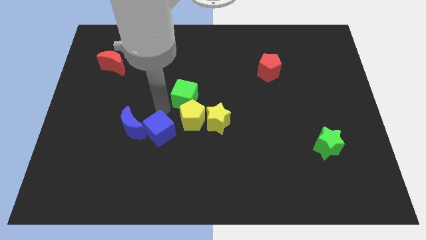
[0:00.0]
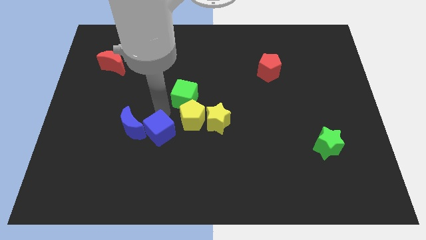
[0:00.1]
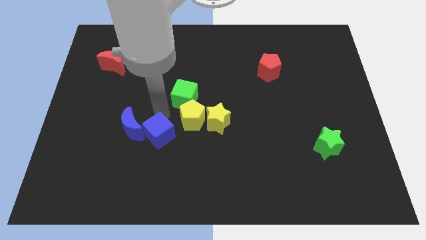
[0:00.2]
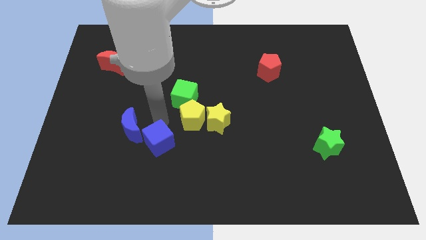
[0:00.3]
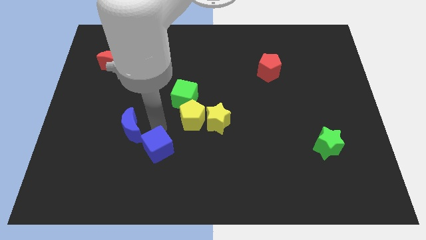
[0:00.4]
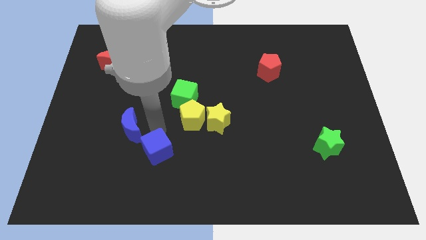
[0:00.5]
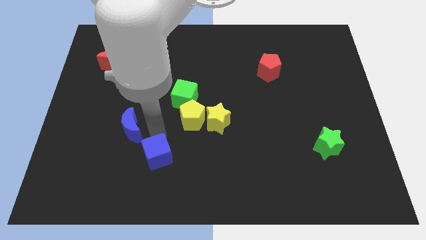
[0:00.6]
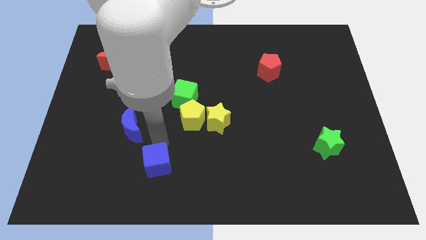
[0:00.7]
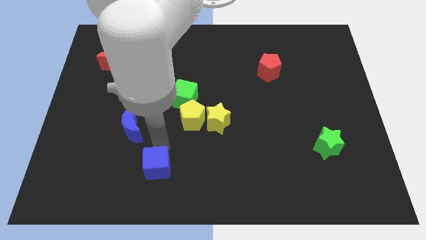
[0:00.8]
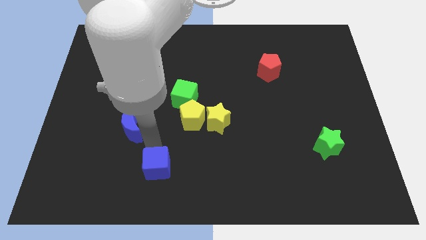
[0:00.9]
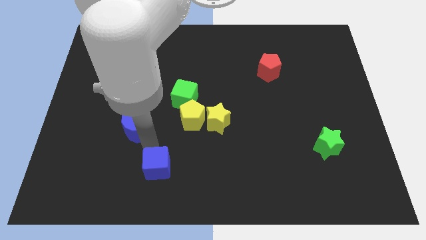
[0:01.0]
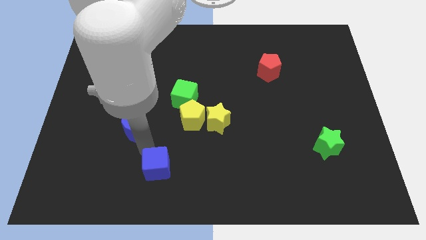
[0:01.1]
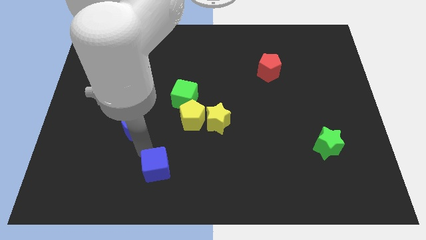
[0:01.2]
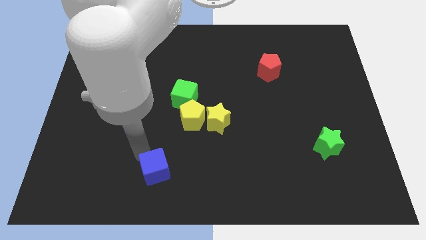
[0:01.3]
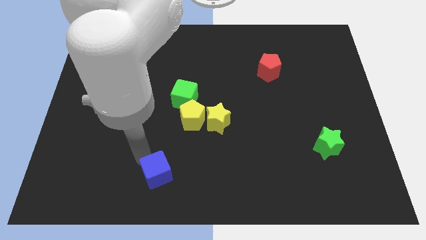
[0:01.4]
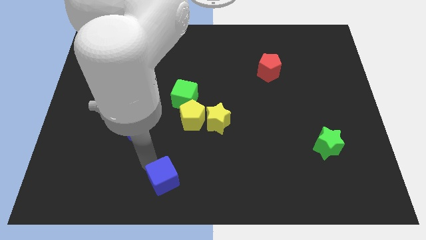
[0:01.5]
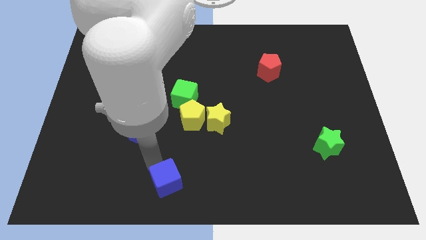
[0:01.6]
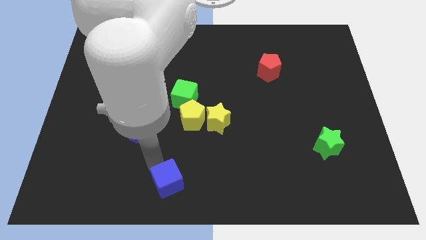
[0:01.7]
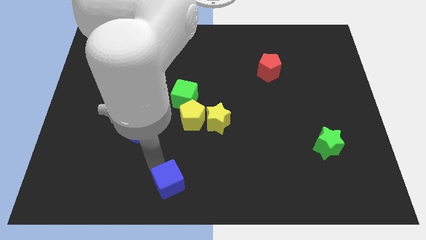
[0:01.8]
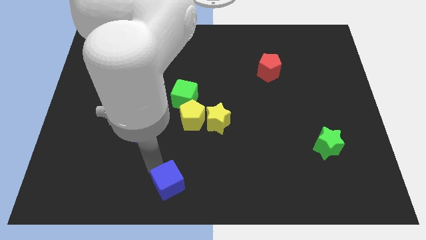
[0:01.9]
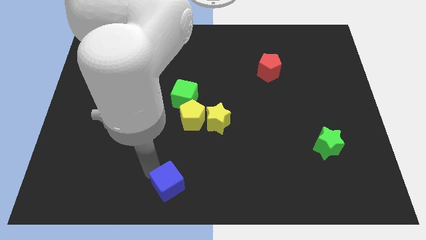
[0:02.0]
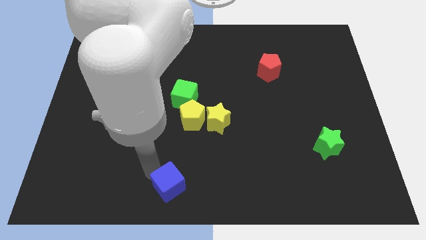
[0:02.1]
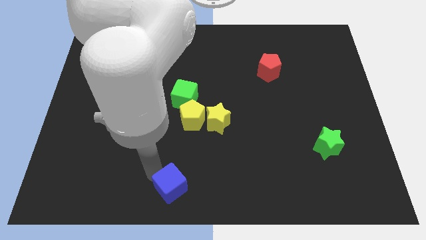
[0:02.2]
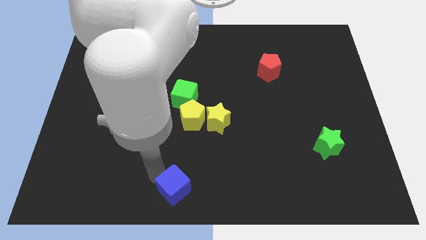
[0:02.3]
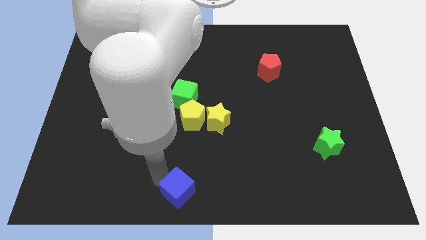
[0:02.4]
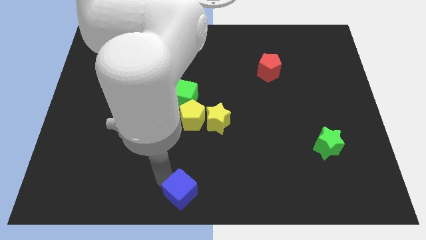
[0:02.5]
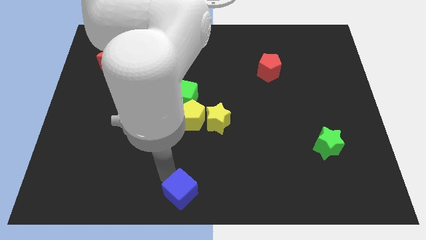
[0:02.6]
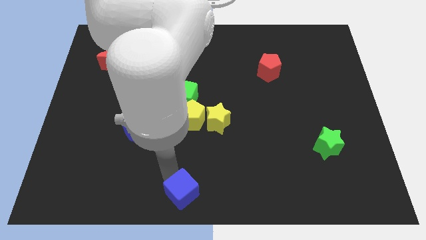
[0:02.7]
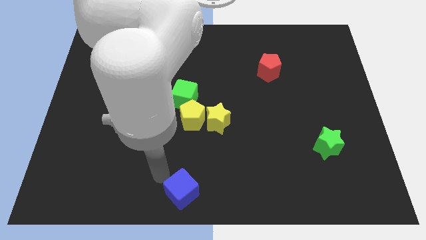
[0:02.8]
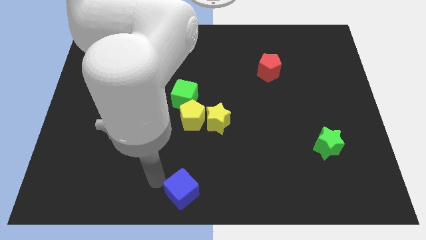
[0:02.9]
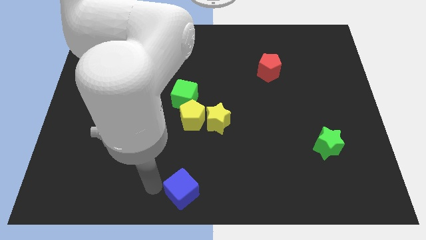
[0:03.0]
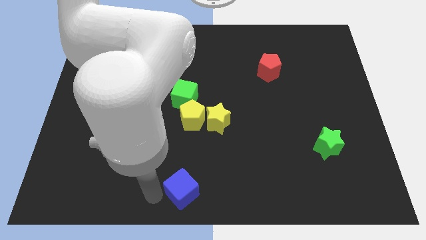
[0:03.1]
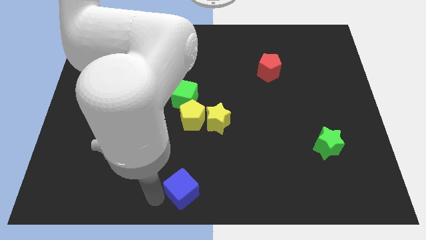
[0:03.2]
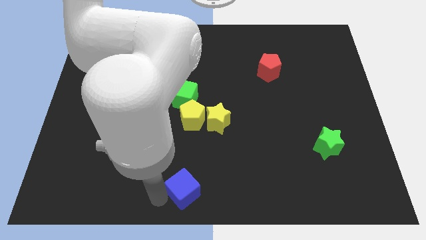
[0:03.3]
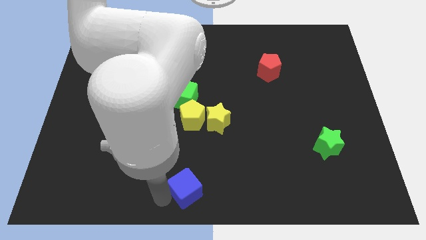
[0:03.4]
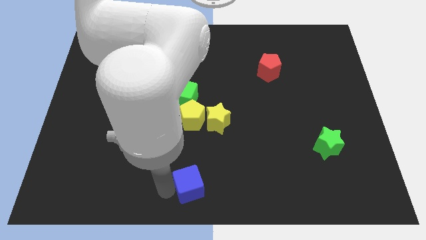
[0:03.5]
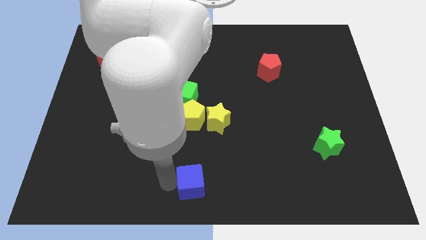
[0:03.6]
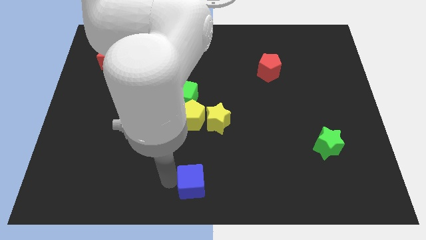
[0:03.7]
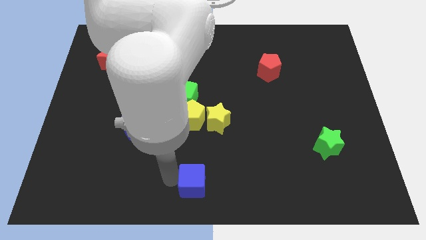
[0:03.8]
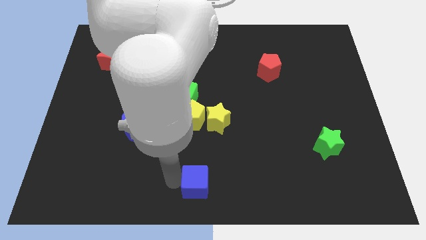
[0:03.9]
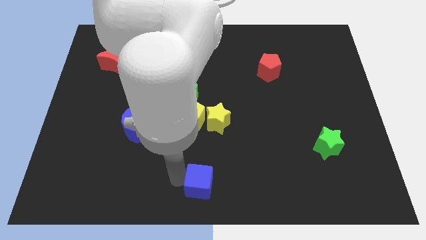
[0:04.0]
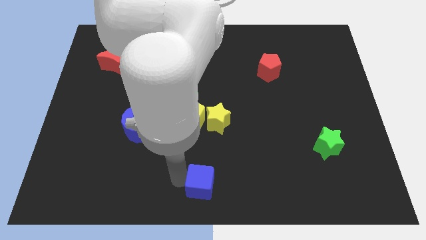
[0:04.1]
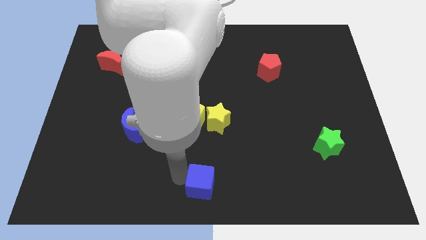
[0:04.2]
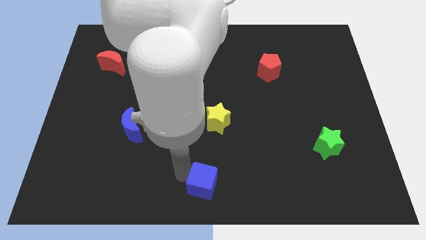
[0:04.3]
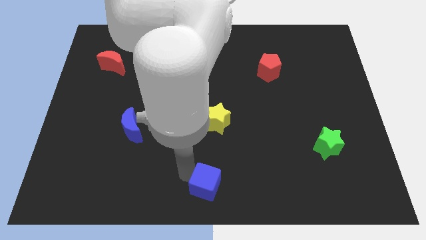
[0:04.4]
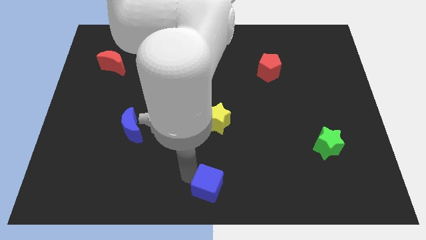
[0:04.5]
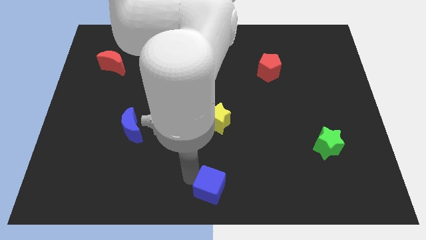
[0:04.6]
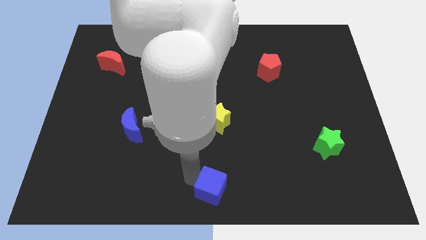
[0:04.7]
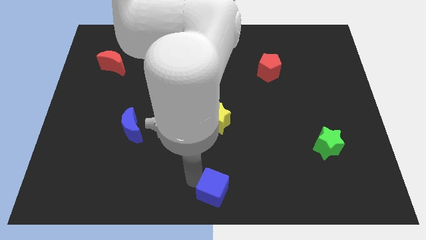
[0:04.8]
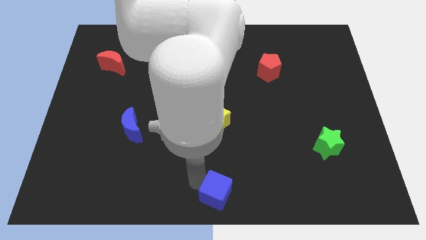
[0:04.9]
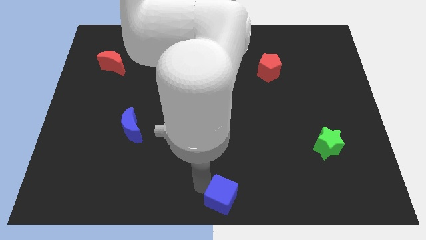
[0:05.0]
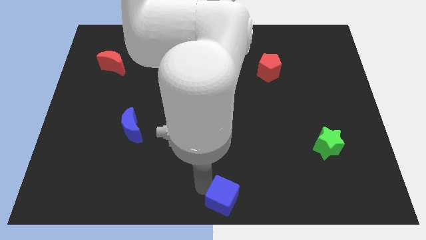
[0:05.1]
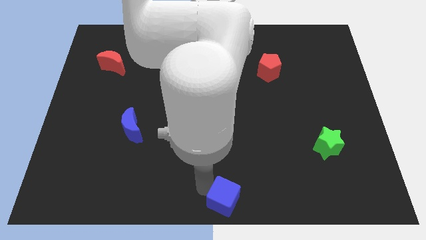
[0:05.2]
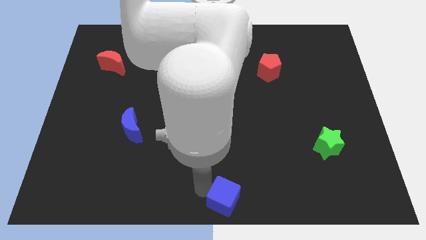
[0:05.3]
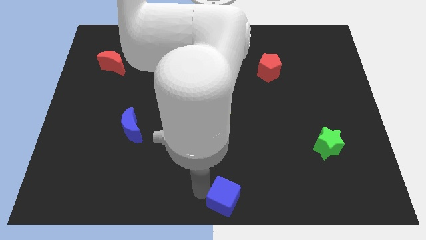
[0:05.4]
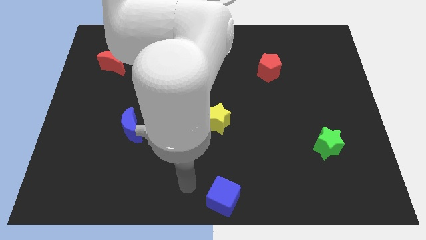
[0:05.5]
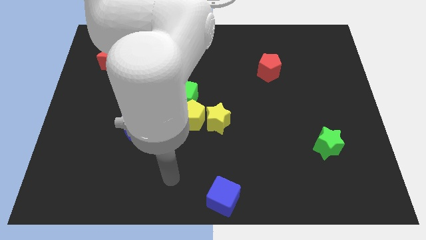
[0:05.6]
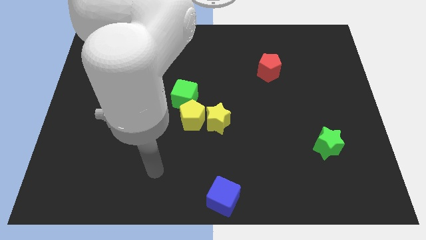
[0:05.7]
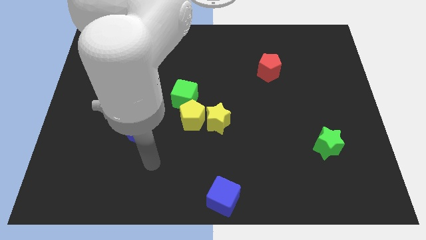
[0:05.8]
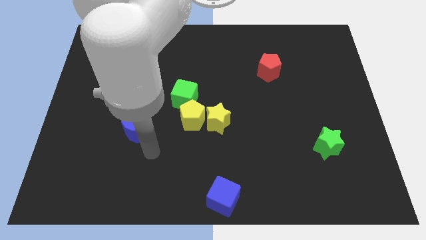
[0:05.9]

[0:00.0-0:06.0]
place the blue cube at the bottom center of the board

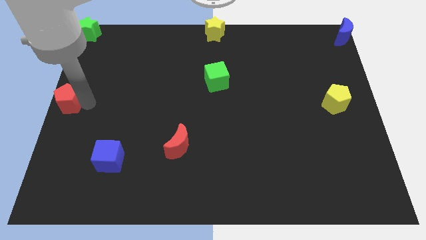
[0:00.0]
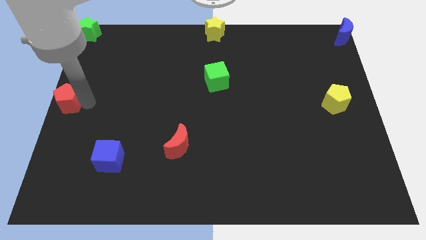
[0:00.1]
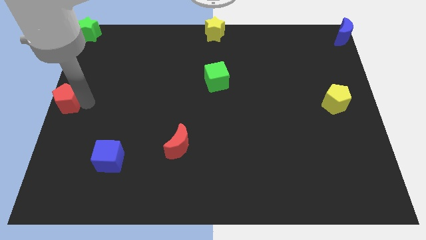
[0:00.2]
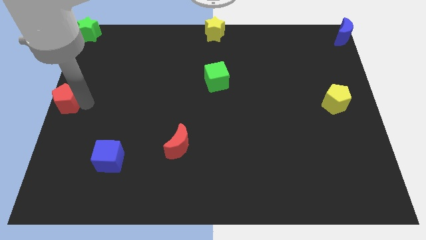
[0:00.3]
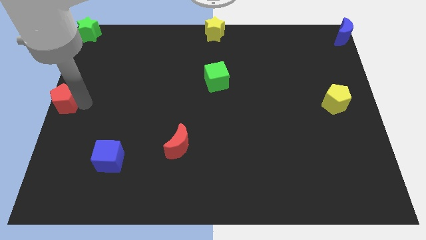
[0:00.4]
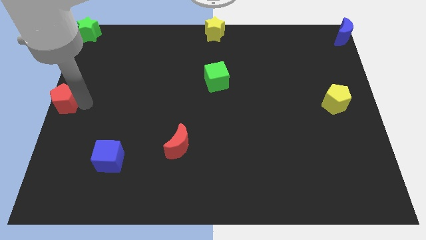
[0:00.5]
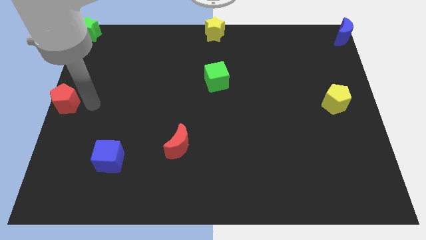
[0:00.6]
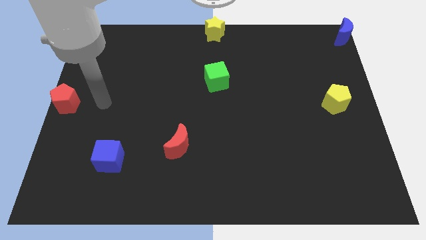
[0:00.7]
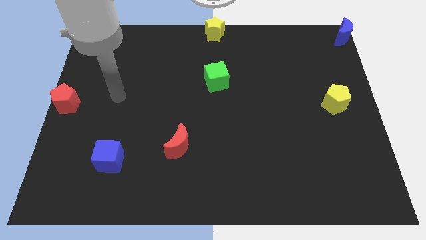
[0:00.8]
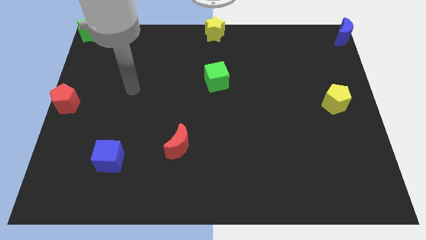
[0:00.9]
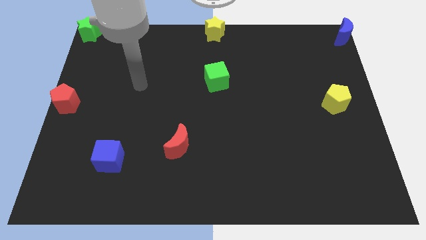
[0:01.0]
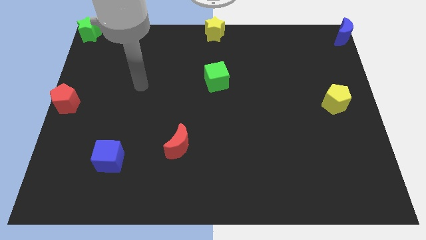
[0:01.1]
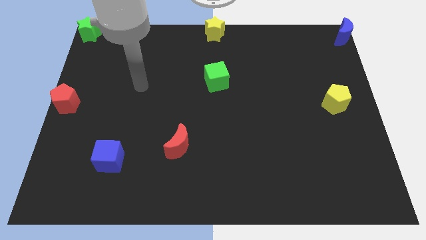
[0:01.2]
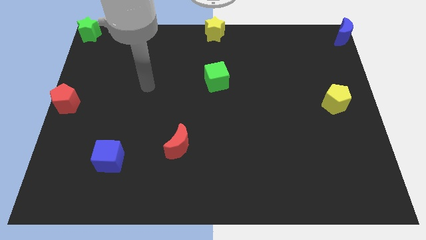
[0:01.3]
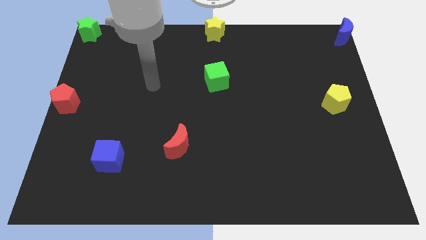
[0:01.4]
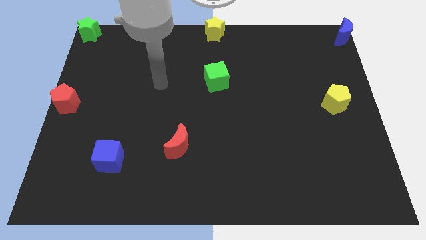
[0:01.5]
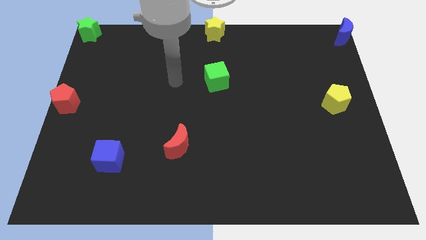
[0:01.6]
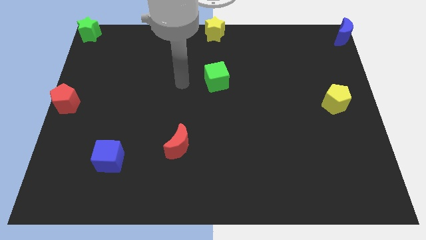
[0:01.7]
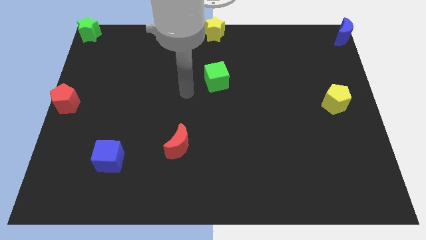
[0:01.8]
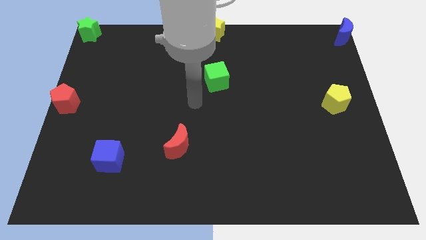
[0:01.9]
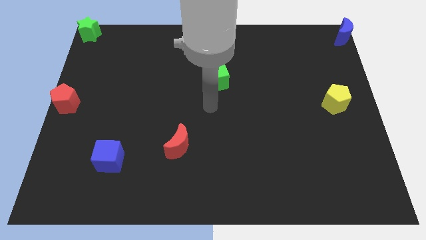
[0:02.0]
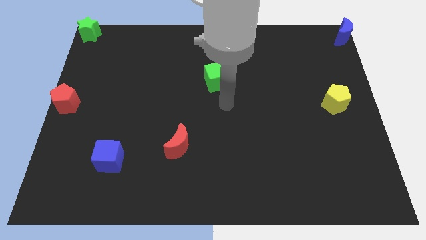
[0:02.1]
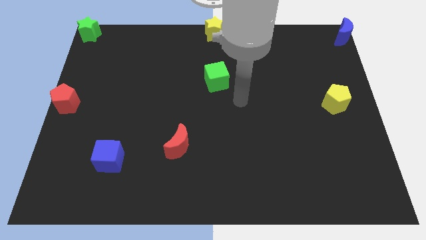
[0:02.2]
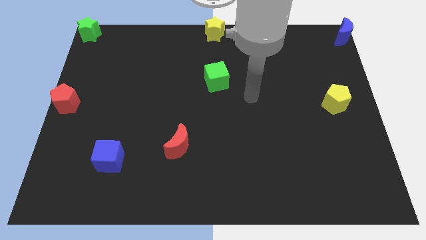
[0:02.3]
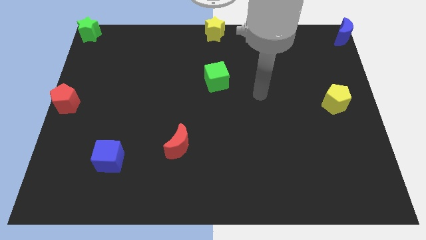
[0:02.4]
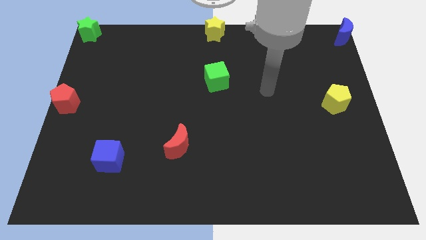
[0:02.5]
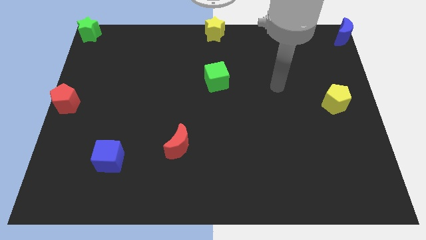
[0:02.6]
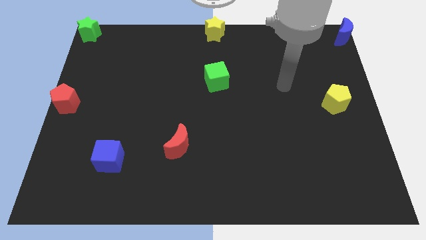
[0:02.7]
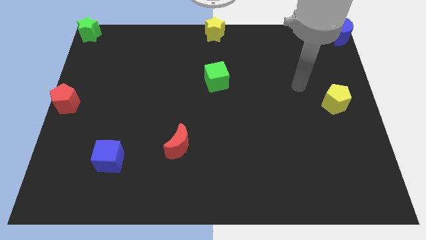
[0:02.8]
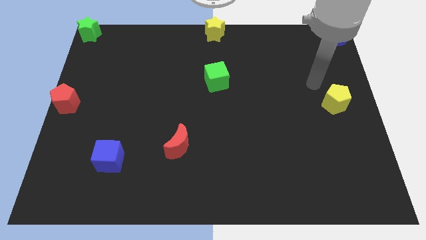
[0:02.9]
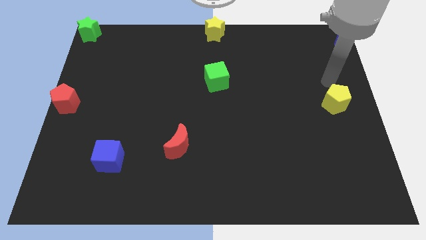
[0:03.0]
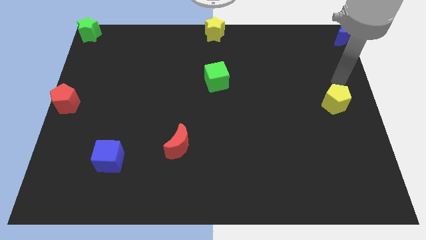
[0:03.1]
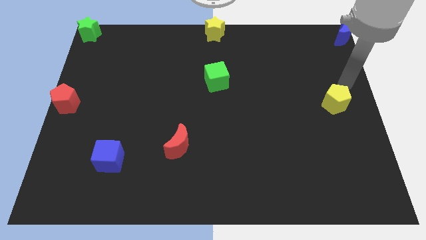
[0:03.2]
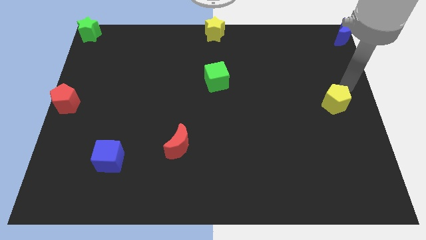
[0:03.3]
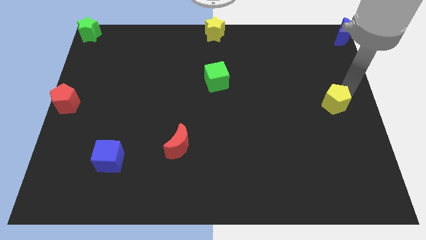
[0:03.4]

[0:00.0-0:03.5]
move your arm towards the yellow pentagon
